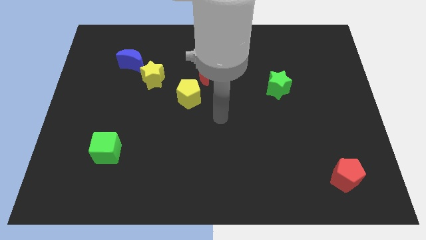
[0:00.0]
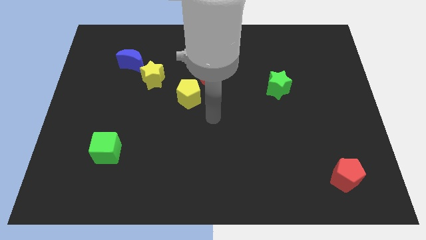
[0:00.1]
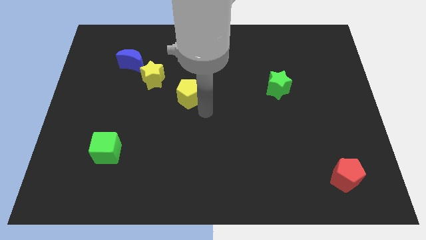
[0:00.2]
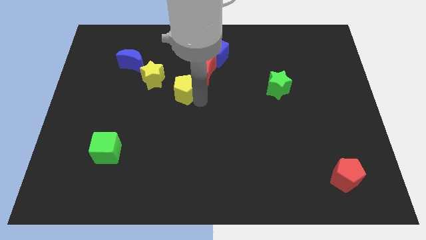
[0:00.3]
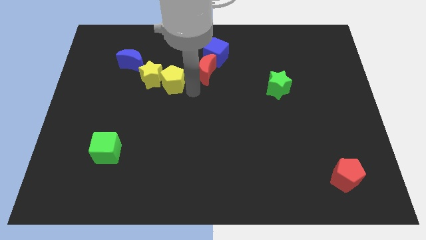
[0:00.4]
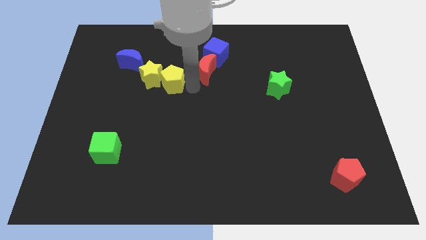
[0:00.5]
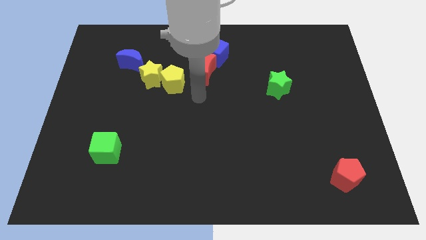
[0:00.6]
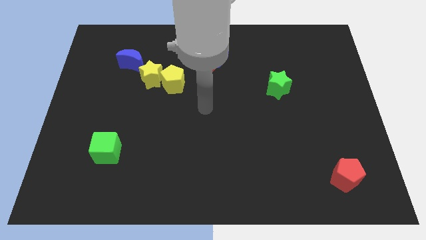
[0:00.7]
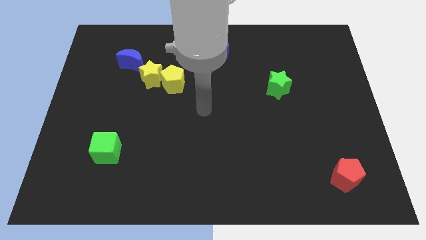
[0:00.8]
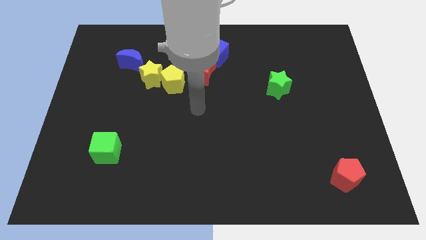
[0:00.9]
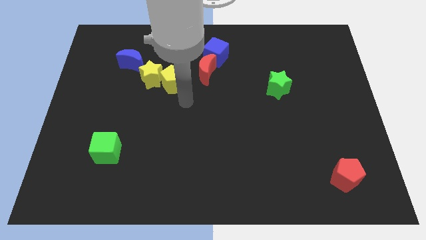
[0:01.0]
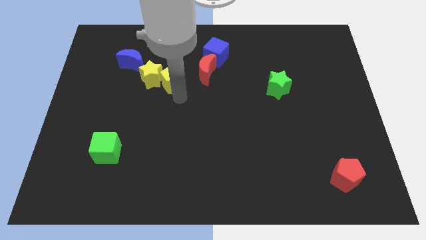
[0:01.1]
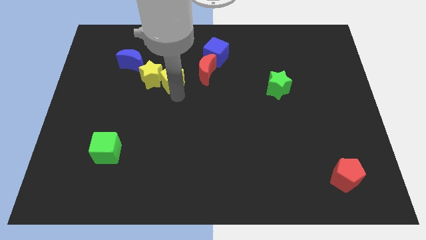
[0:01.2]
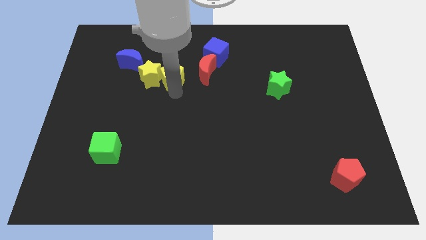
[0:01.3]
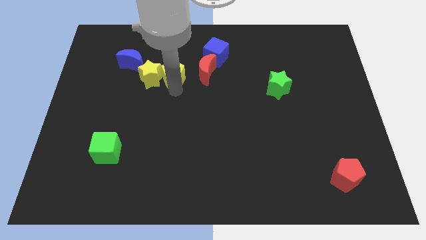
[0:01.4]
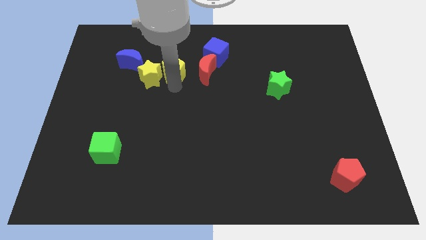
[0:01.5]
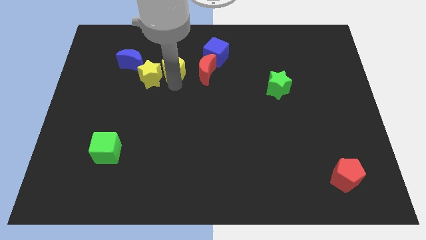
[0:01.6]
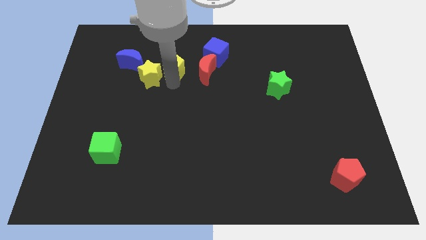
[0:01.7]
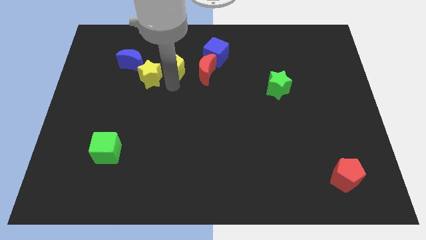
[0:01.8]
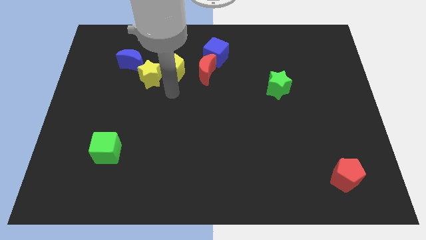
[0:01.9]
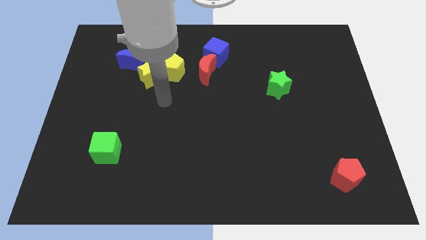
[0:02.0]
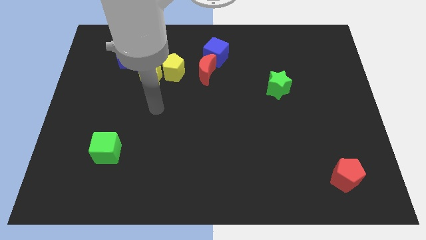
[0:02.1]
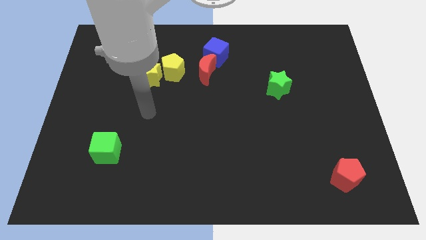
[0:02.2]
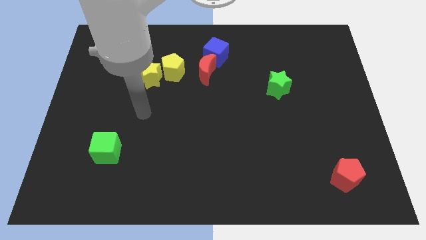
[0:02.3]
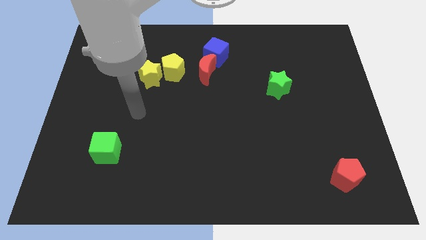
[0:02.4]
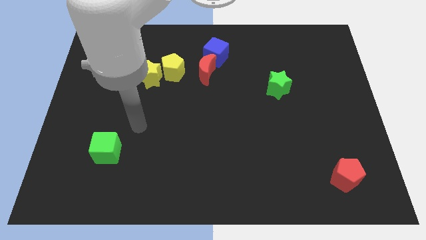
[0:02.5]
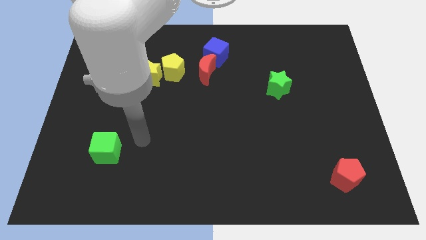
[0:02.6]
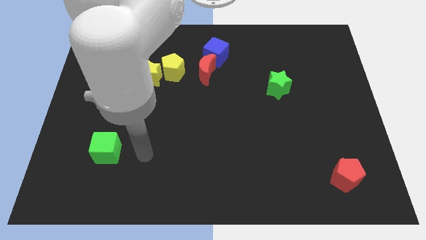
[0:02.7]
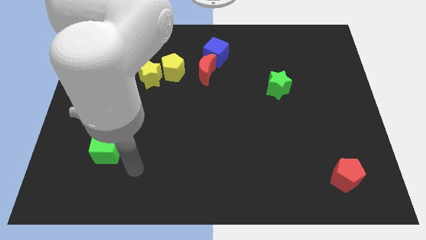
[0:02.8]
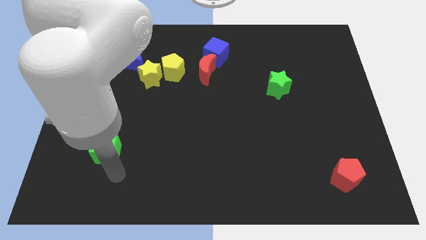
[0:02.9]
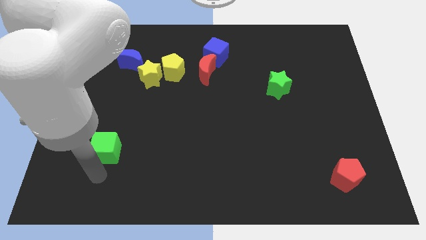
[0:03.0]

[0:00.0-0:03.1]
push the yellow pentagon to the right side of the yellow star

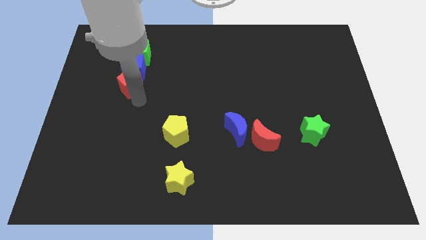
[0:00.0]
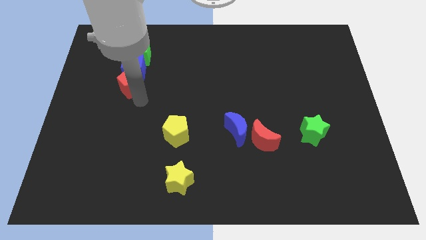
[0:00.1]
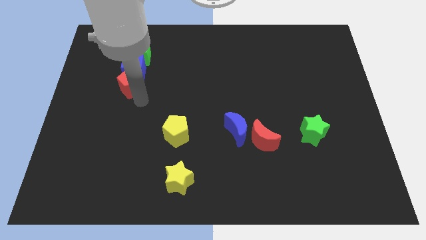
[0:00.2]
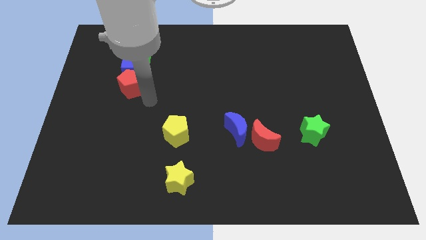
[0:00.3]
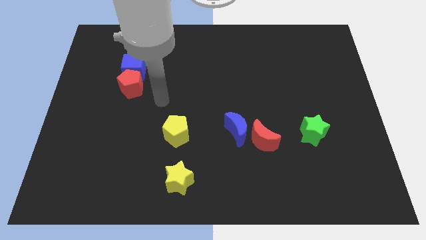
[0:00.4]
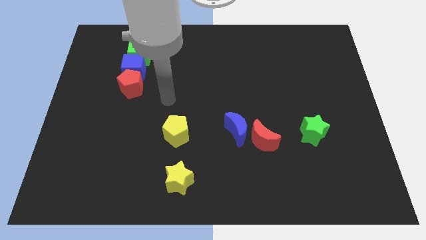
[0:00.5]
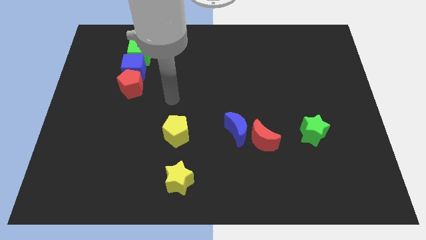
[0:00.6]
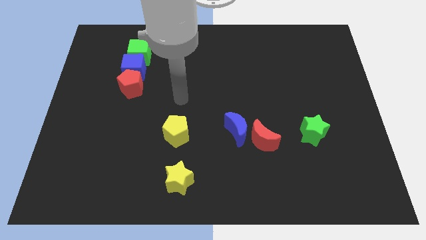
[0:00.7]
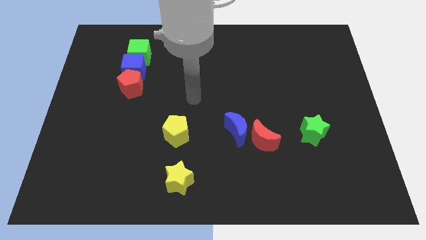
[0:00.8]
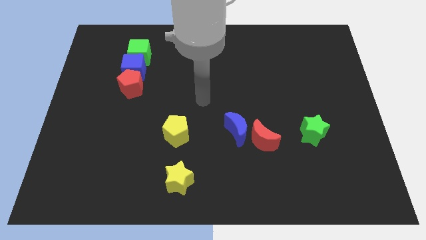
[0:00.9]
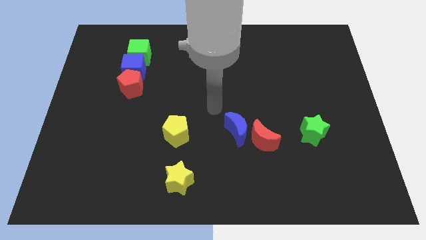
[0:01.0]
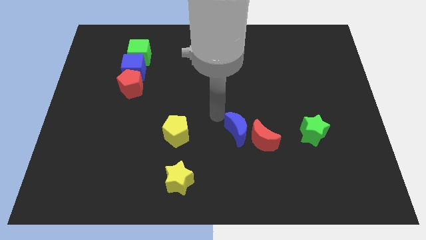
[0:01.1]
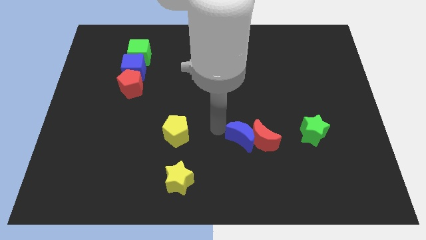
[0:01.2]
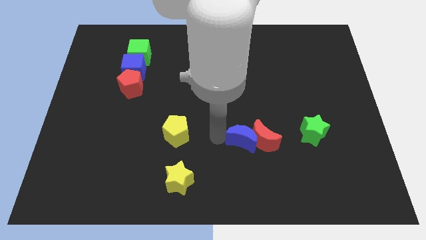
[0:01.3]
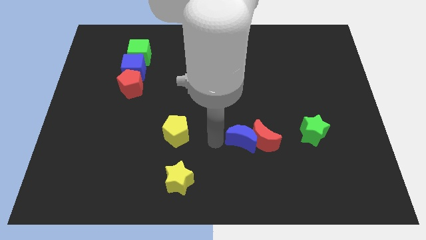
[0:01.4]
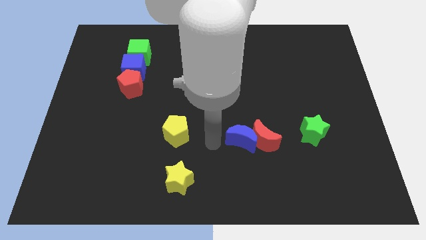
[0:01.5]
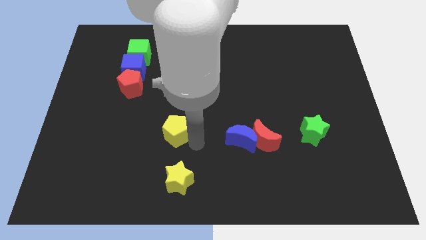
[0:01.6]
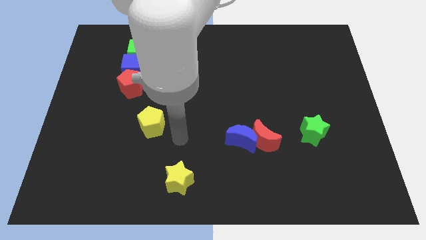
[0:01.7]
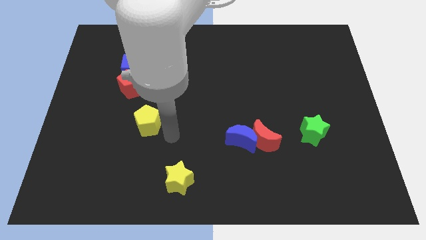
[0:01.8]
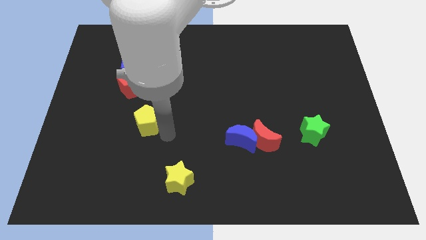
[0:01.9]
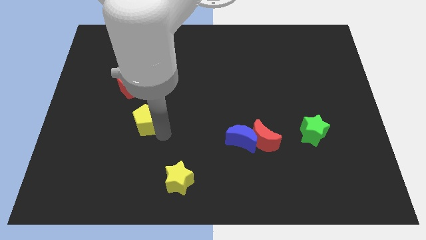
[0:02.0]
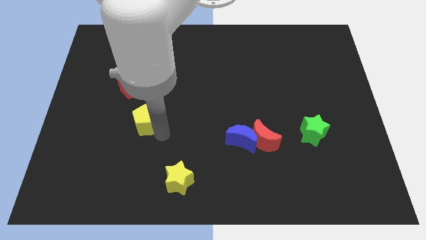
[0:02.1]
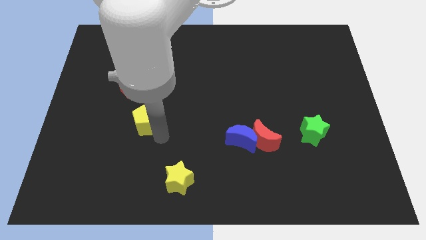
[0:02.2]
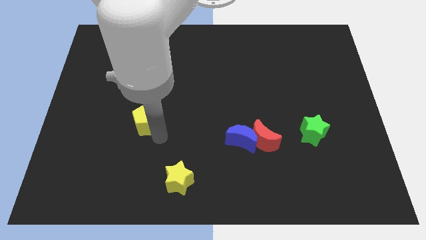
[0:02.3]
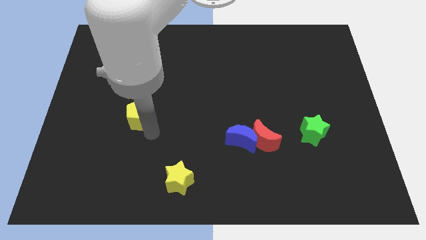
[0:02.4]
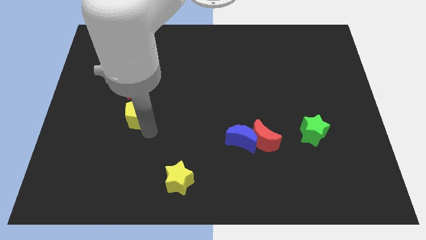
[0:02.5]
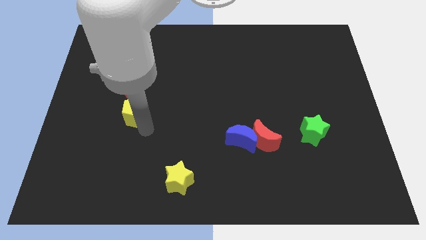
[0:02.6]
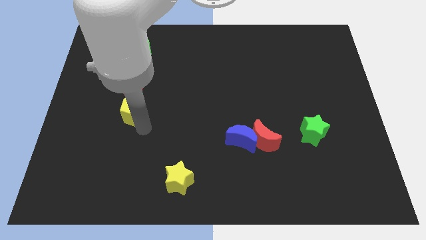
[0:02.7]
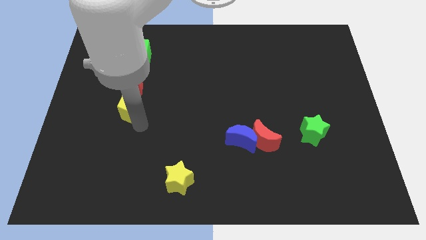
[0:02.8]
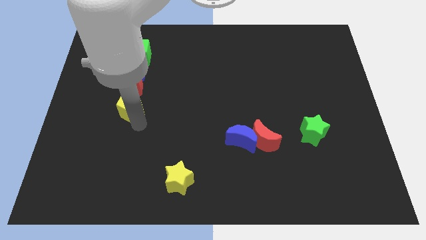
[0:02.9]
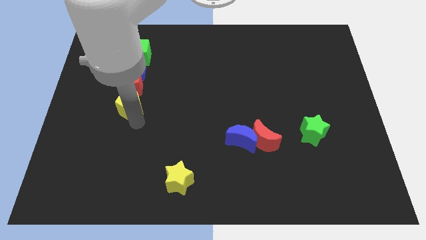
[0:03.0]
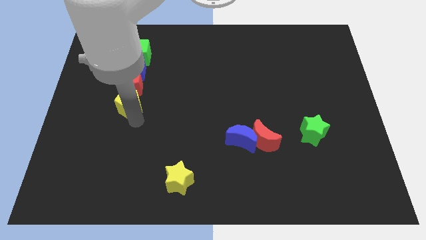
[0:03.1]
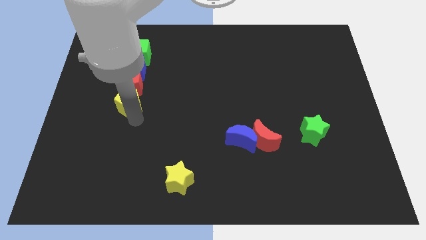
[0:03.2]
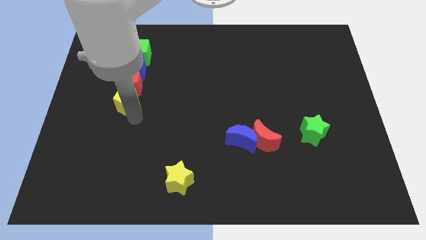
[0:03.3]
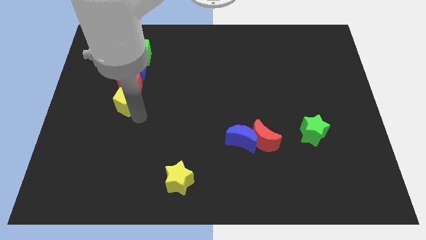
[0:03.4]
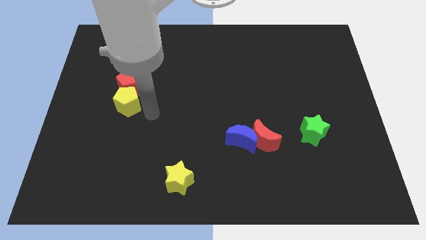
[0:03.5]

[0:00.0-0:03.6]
move the yellow pentagon to the bottom of the red pentagon

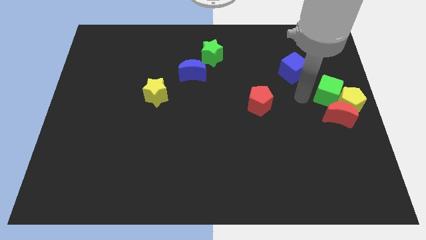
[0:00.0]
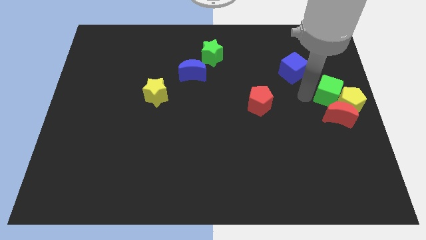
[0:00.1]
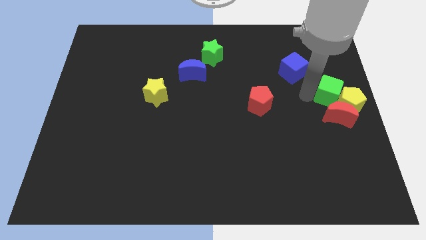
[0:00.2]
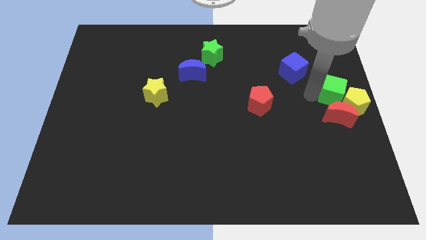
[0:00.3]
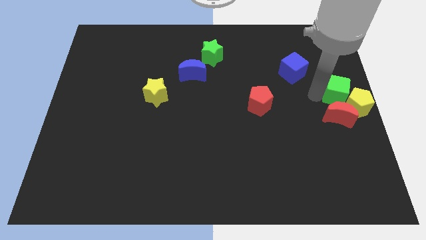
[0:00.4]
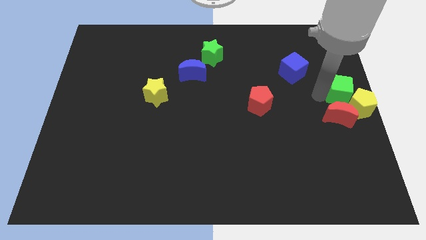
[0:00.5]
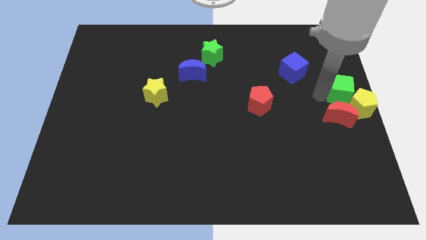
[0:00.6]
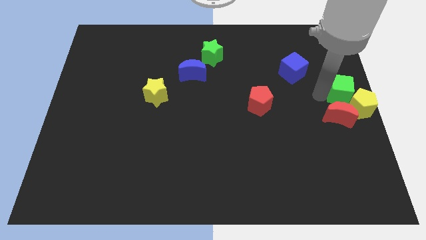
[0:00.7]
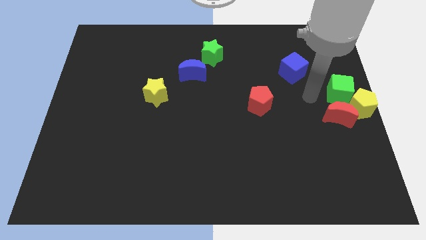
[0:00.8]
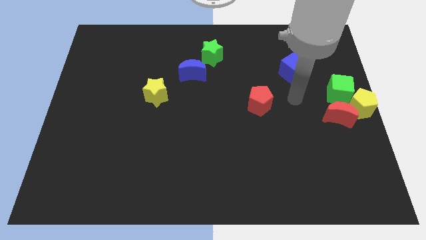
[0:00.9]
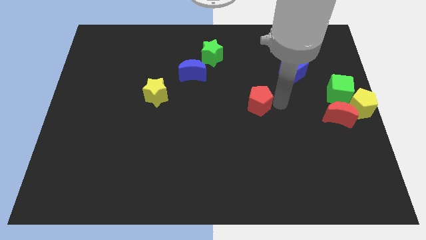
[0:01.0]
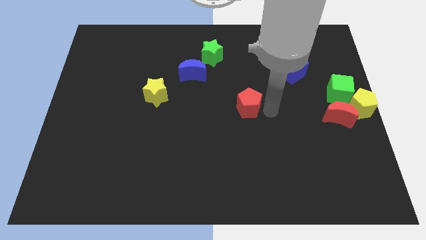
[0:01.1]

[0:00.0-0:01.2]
push the yellow pentagon towards the right side of the board with the help of the green cube

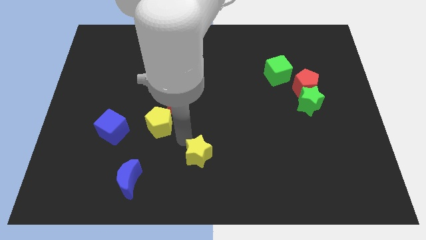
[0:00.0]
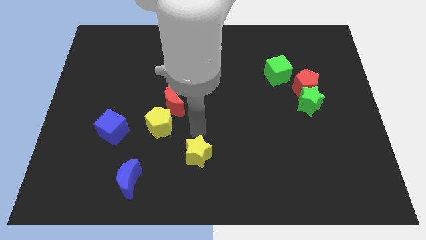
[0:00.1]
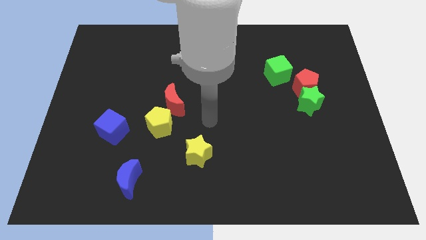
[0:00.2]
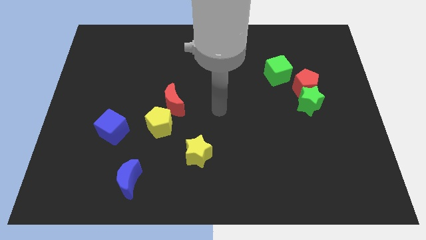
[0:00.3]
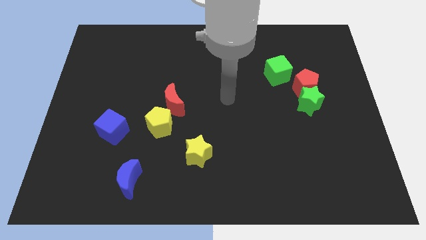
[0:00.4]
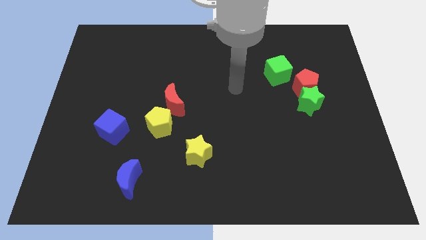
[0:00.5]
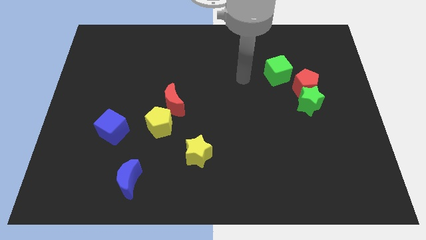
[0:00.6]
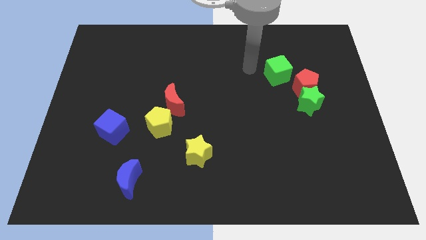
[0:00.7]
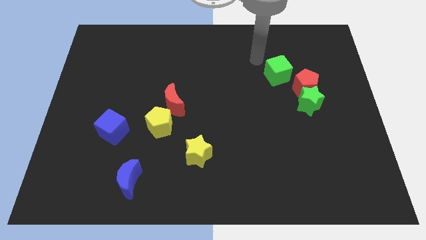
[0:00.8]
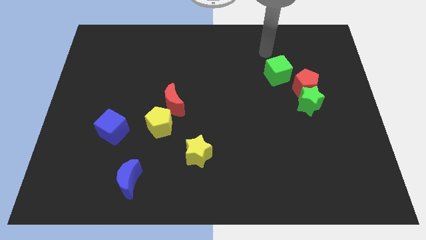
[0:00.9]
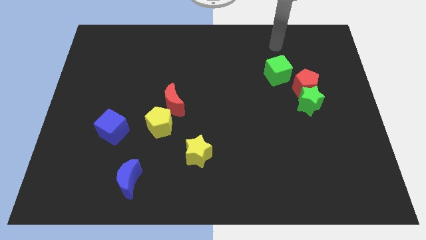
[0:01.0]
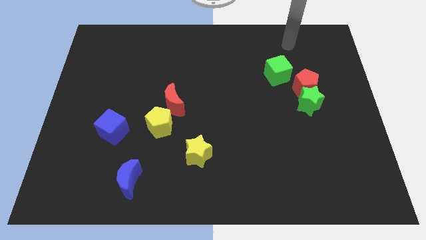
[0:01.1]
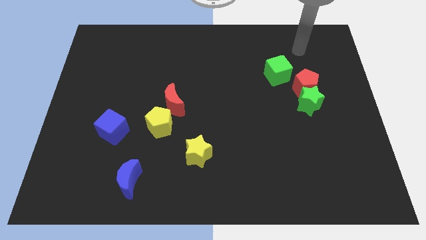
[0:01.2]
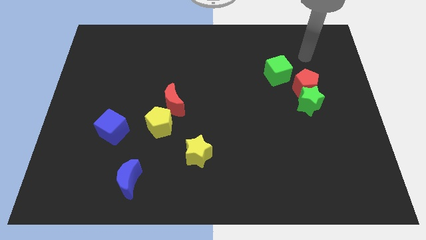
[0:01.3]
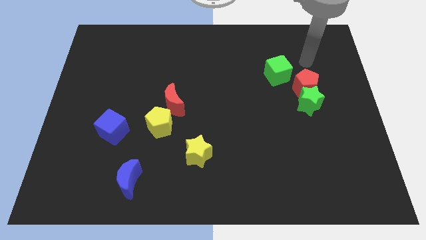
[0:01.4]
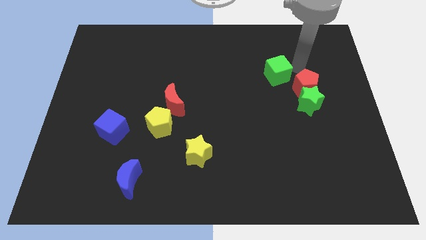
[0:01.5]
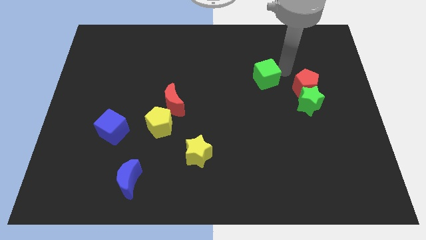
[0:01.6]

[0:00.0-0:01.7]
go near green cube
